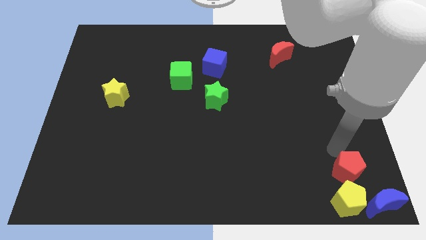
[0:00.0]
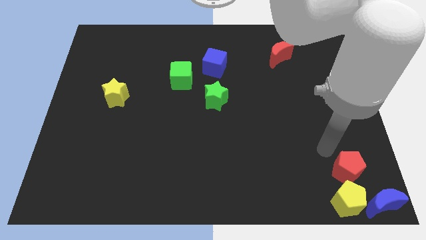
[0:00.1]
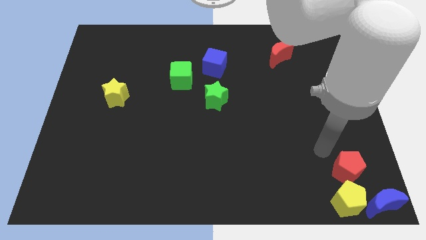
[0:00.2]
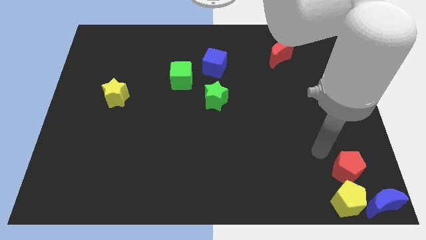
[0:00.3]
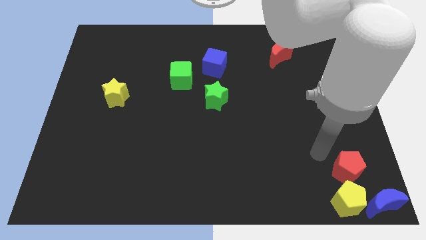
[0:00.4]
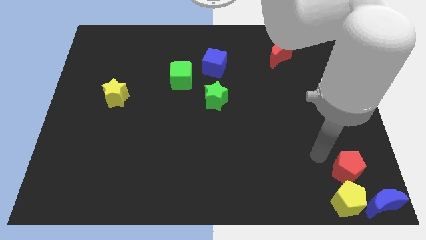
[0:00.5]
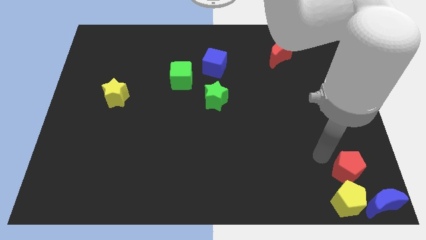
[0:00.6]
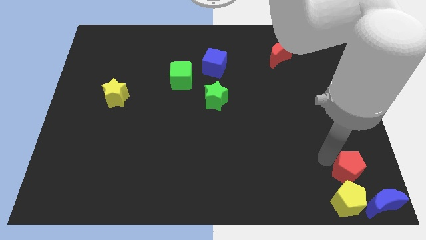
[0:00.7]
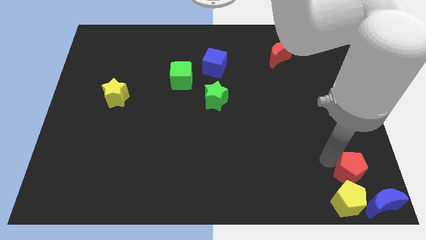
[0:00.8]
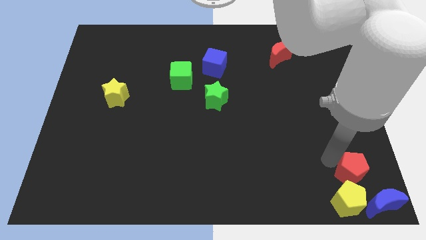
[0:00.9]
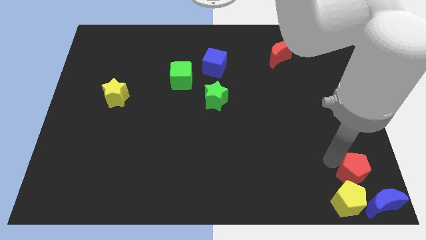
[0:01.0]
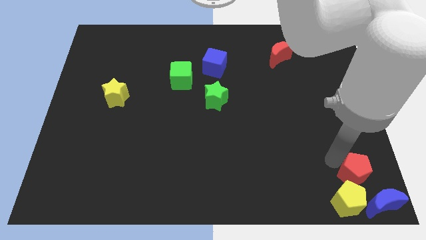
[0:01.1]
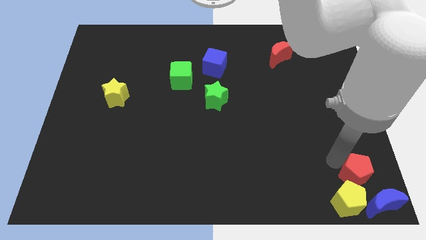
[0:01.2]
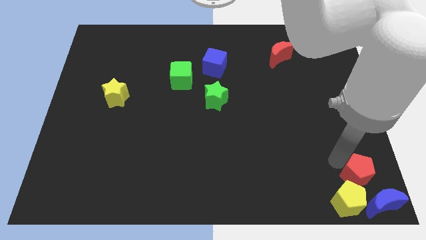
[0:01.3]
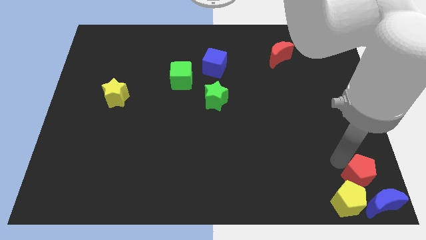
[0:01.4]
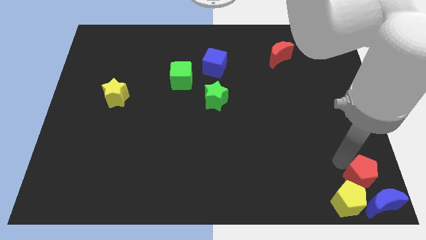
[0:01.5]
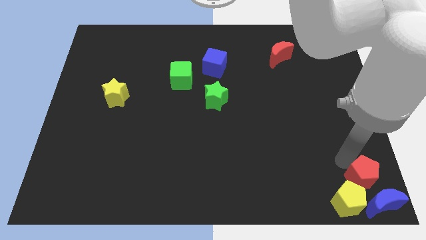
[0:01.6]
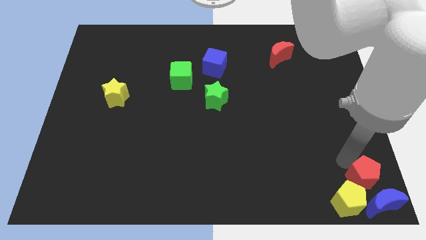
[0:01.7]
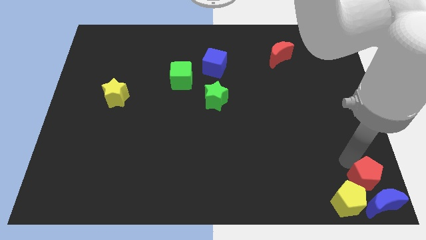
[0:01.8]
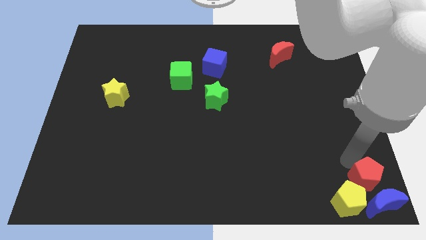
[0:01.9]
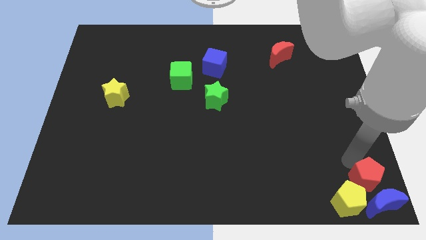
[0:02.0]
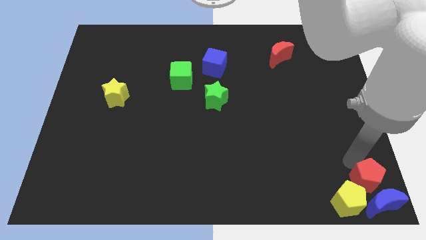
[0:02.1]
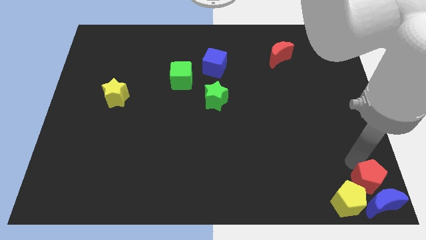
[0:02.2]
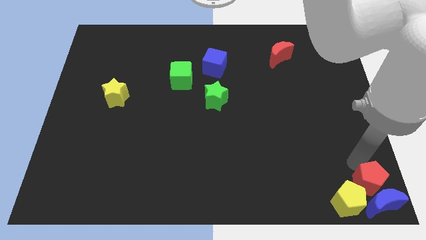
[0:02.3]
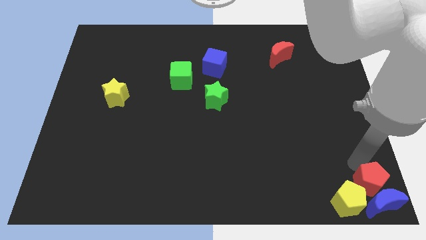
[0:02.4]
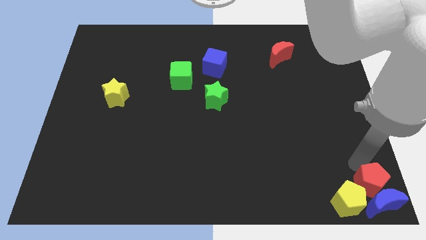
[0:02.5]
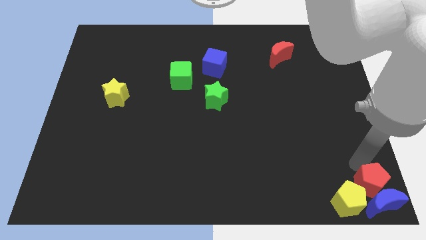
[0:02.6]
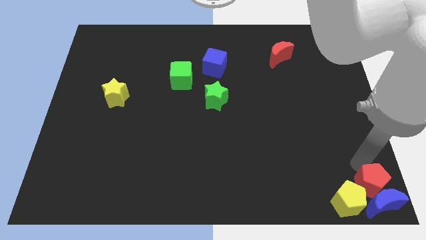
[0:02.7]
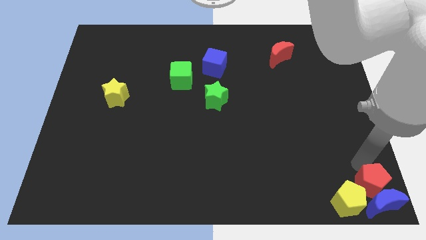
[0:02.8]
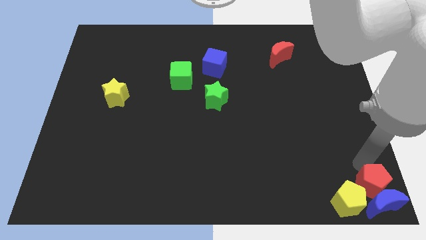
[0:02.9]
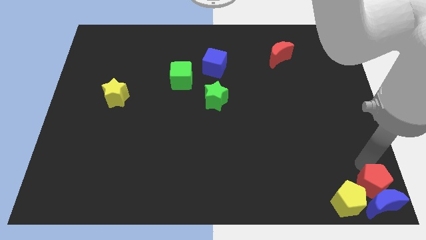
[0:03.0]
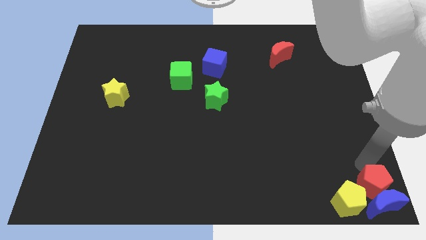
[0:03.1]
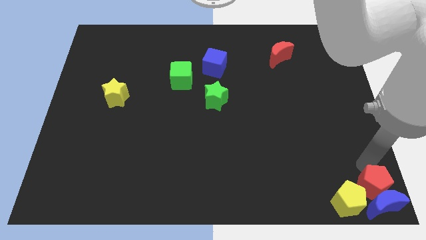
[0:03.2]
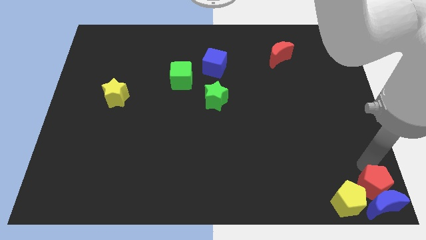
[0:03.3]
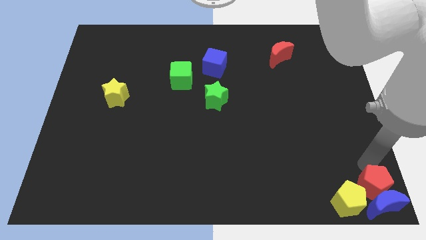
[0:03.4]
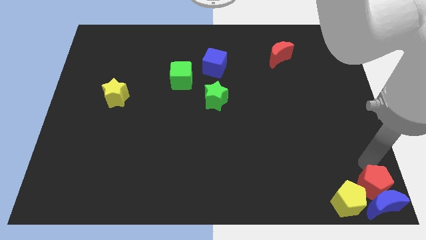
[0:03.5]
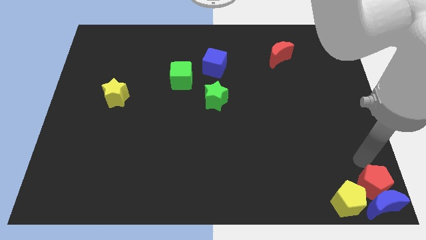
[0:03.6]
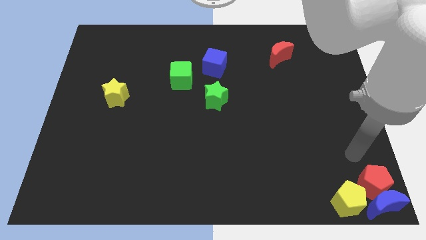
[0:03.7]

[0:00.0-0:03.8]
move the red pentagon into the top side of the blue moon

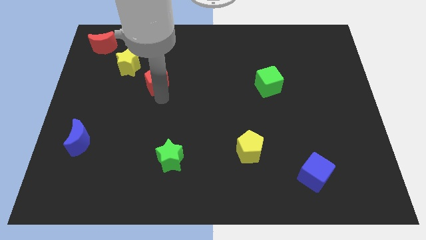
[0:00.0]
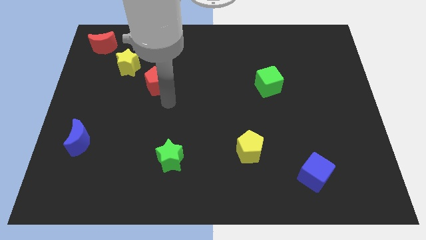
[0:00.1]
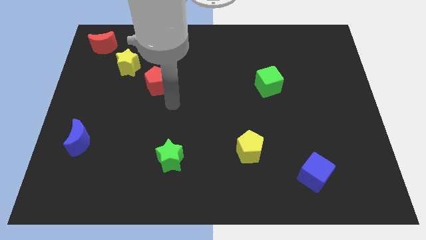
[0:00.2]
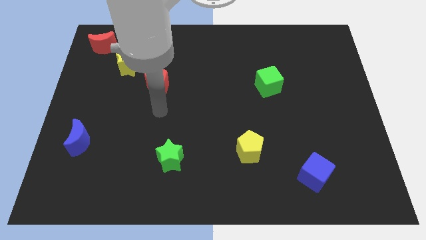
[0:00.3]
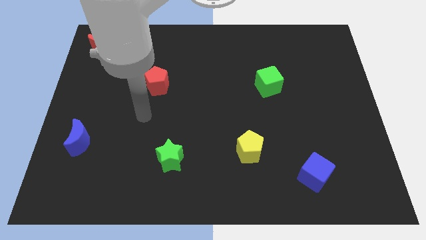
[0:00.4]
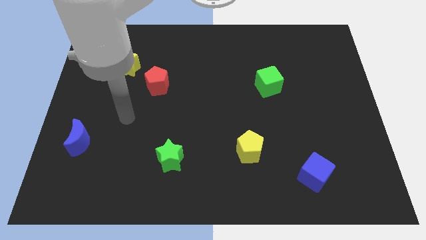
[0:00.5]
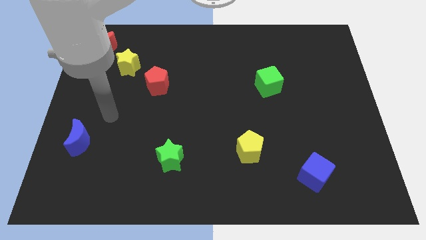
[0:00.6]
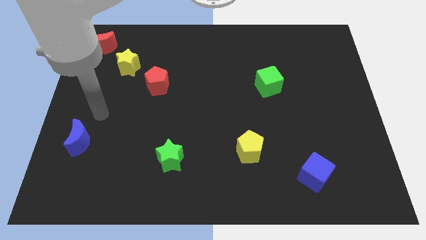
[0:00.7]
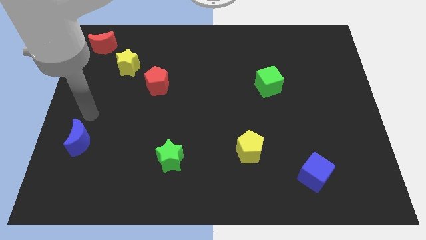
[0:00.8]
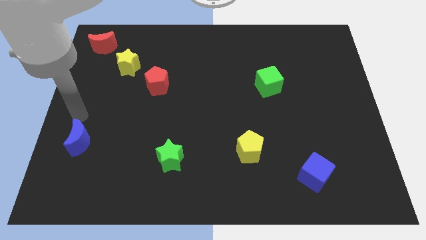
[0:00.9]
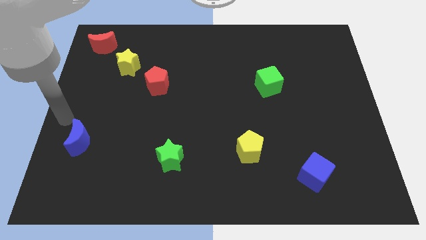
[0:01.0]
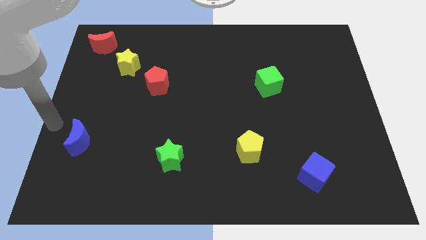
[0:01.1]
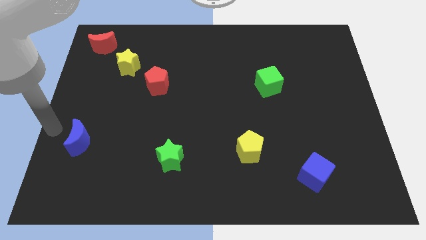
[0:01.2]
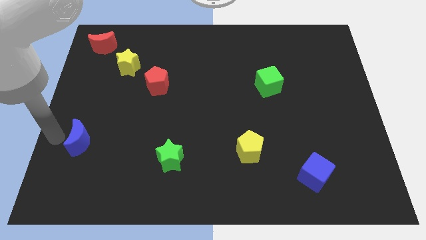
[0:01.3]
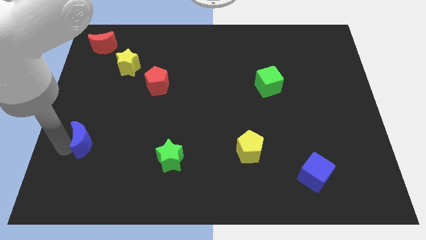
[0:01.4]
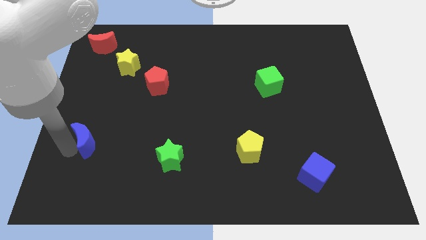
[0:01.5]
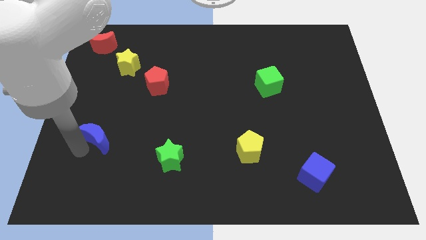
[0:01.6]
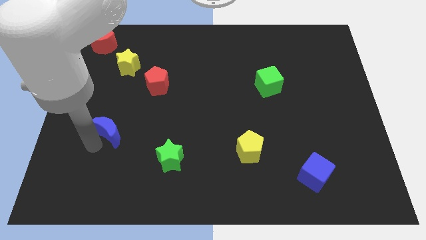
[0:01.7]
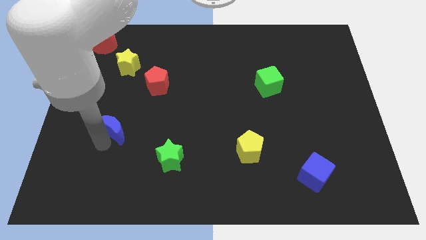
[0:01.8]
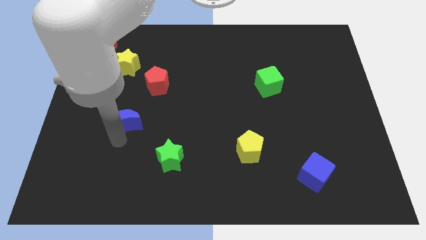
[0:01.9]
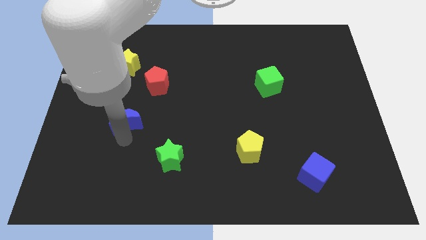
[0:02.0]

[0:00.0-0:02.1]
move blue crescent towards red pentagon

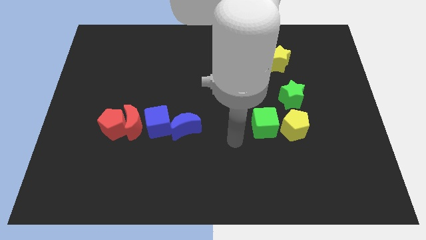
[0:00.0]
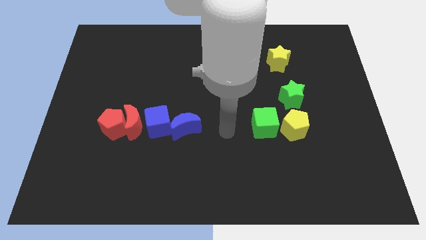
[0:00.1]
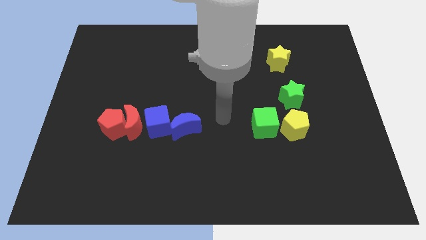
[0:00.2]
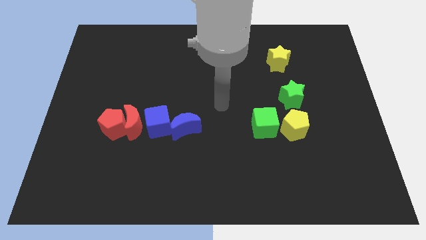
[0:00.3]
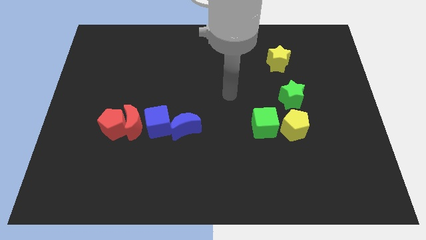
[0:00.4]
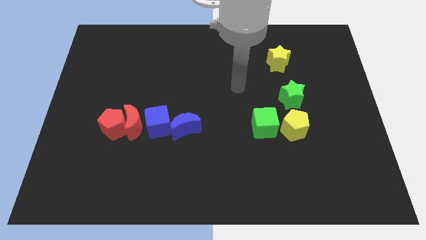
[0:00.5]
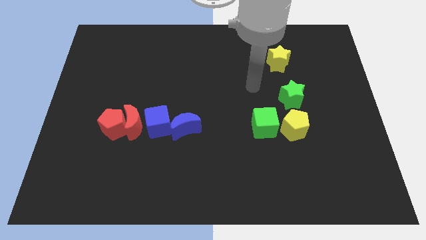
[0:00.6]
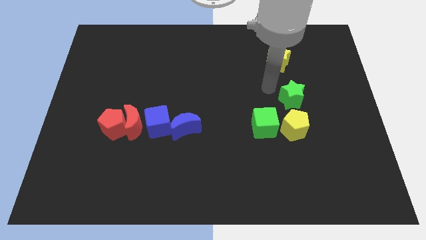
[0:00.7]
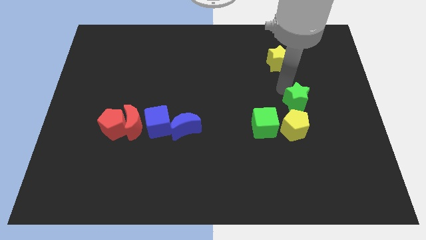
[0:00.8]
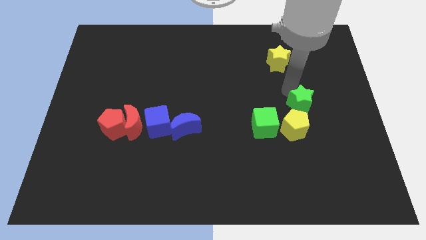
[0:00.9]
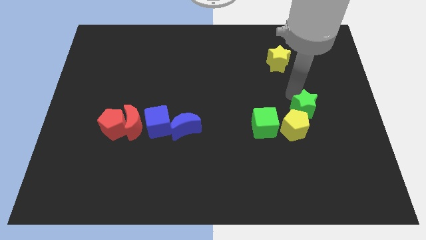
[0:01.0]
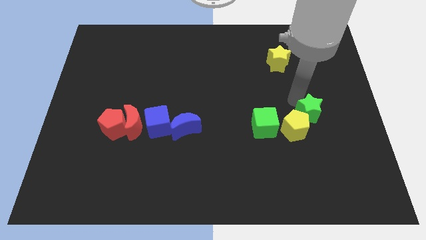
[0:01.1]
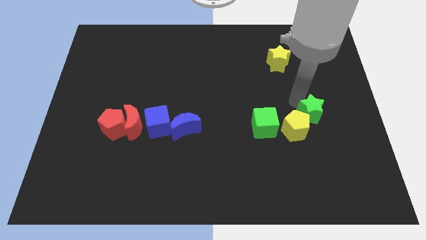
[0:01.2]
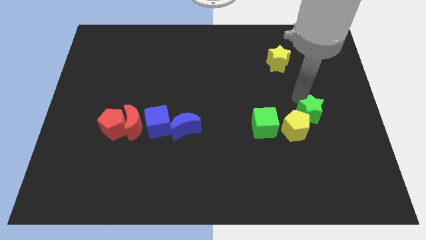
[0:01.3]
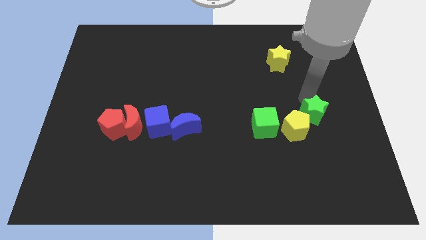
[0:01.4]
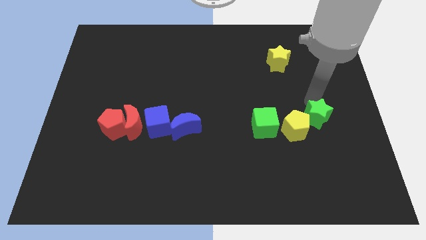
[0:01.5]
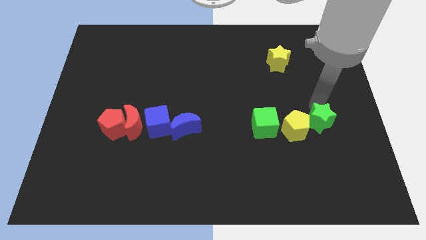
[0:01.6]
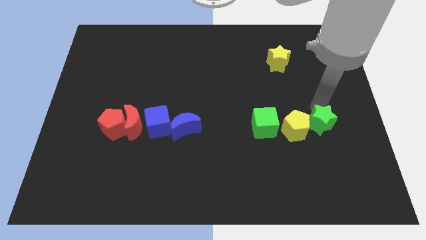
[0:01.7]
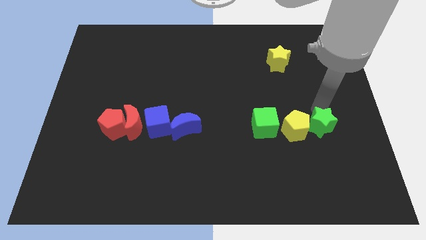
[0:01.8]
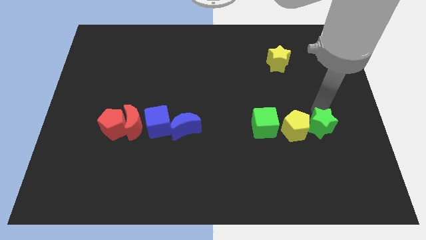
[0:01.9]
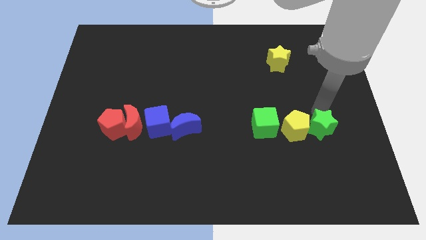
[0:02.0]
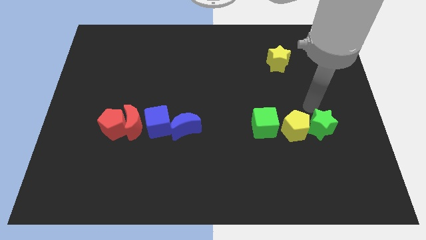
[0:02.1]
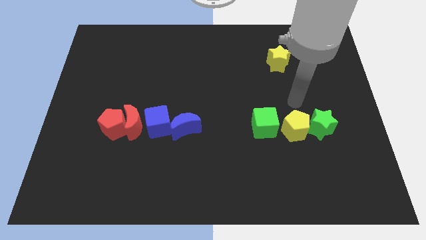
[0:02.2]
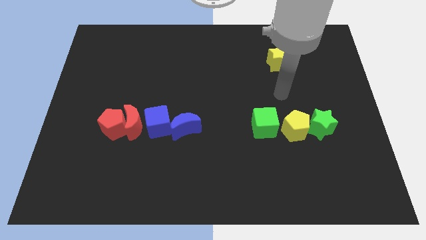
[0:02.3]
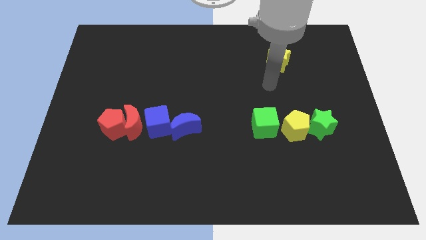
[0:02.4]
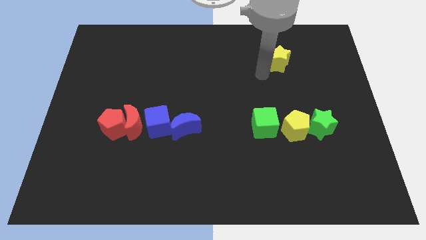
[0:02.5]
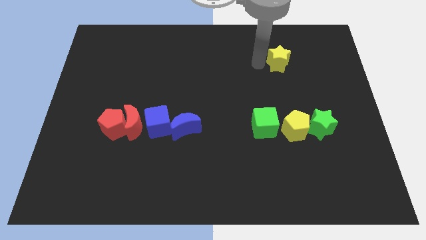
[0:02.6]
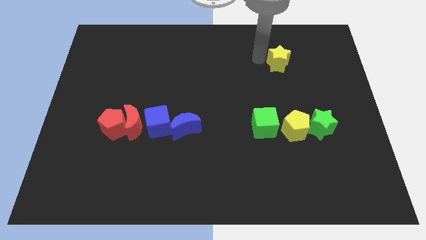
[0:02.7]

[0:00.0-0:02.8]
push the green star to the right of the yellow pentagon

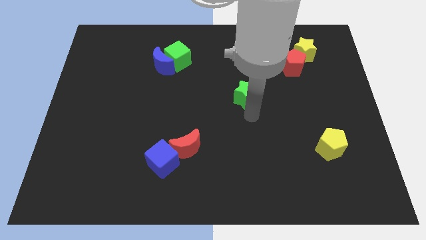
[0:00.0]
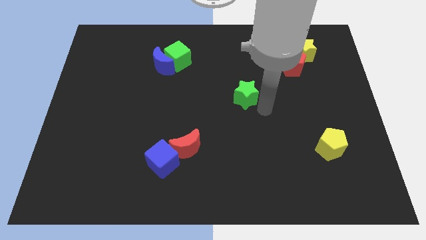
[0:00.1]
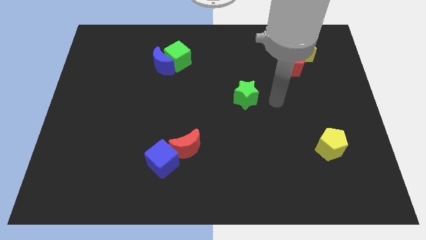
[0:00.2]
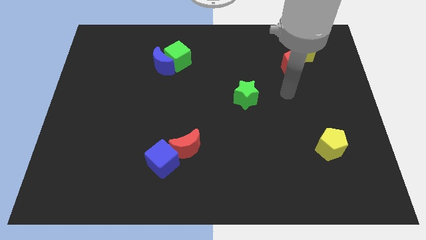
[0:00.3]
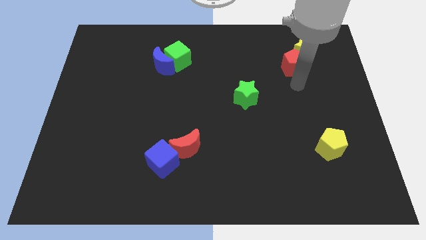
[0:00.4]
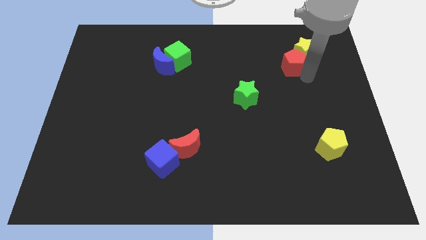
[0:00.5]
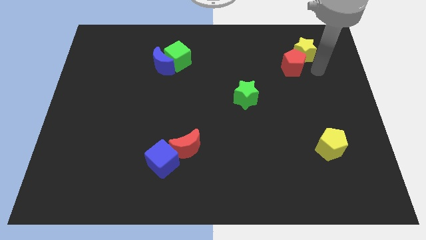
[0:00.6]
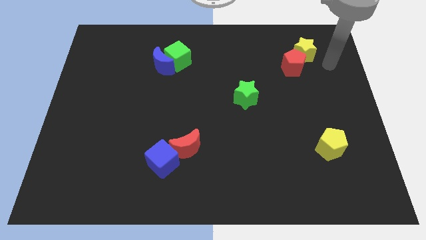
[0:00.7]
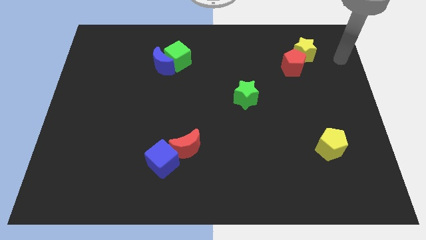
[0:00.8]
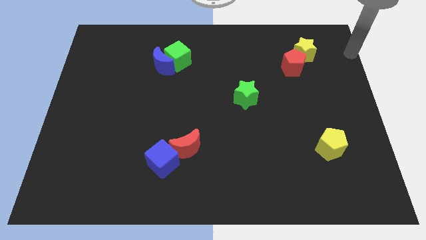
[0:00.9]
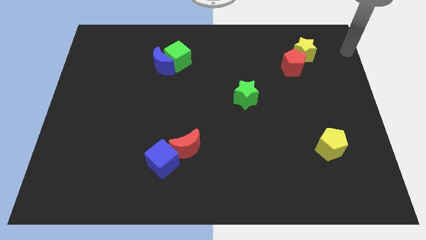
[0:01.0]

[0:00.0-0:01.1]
move your arm away from the green star
